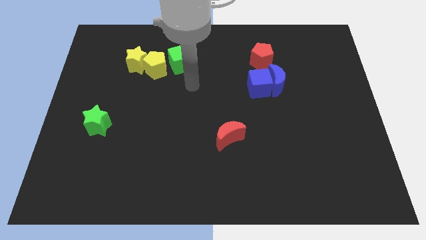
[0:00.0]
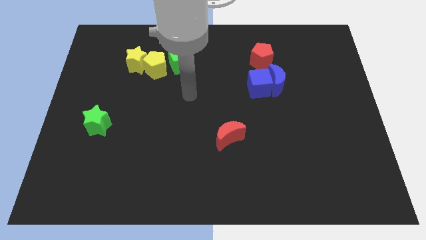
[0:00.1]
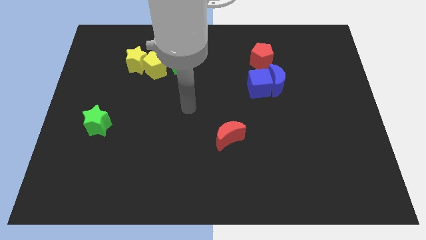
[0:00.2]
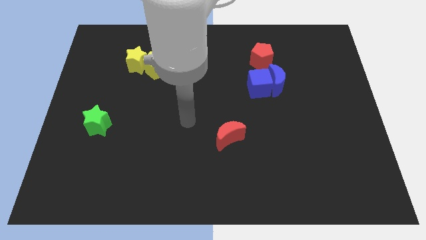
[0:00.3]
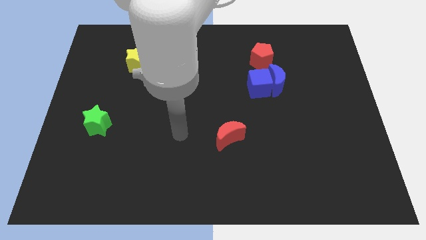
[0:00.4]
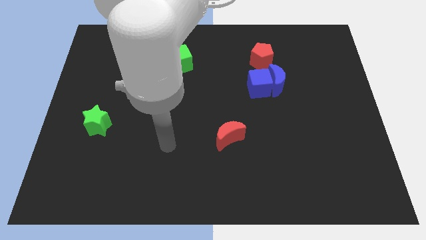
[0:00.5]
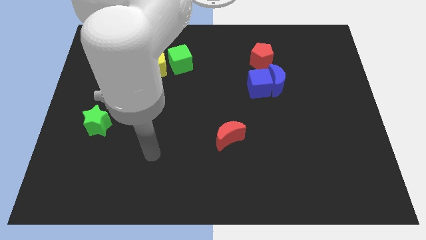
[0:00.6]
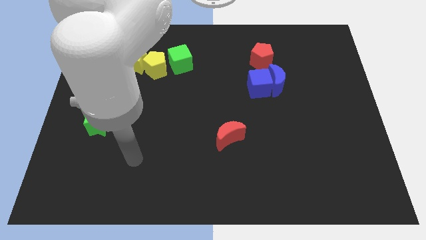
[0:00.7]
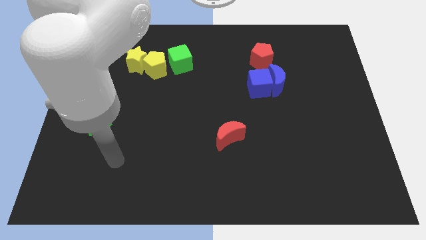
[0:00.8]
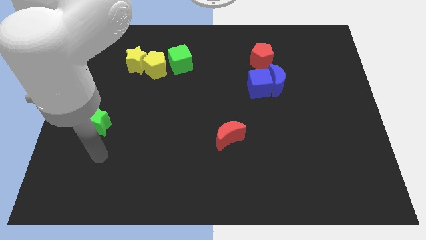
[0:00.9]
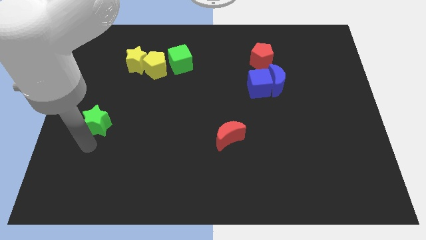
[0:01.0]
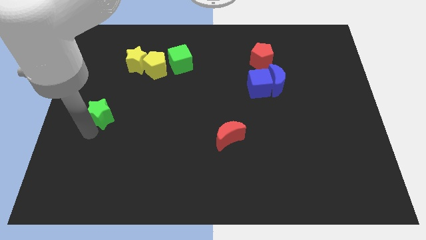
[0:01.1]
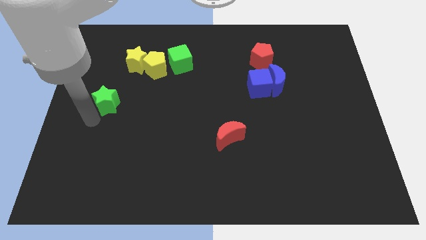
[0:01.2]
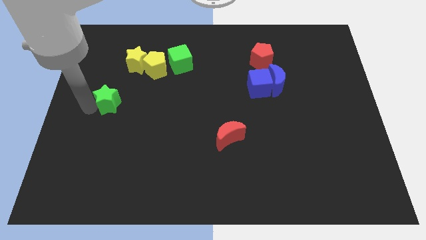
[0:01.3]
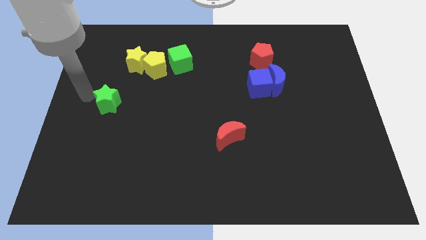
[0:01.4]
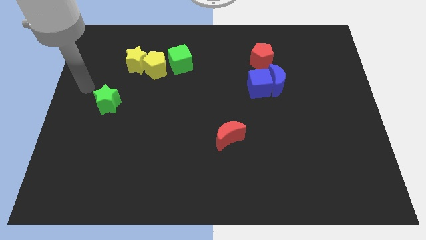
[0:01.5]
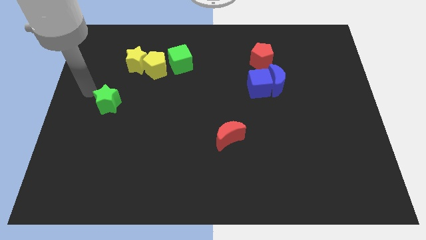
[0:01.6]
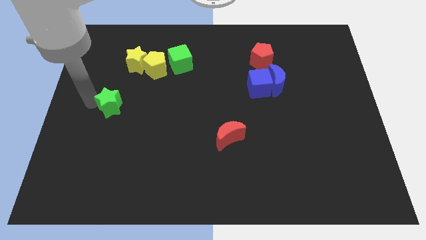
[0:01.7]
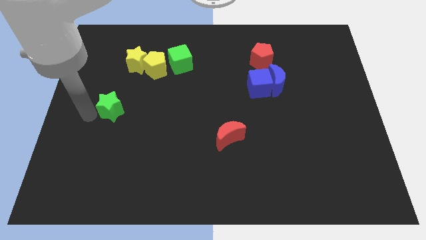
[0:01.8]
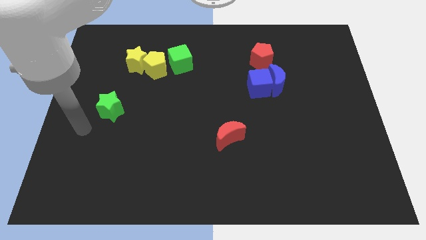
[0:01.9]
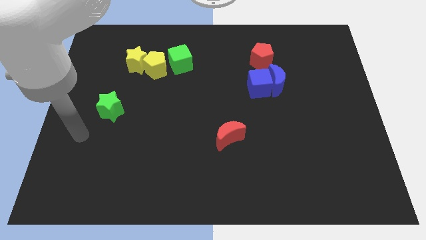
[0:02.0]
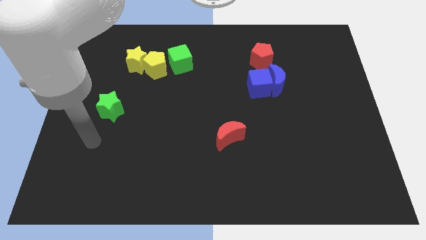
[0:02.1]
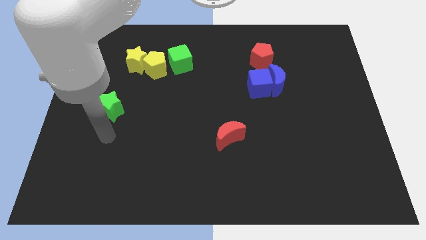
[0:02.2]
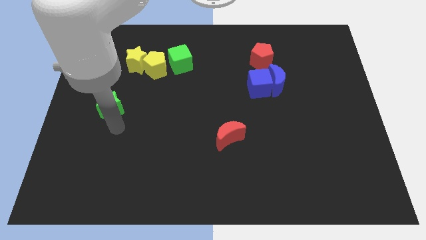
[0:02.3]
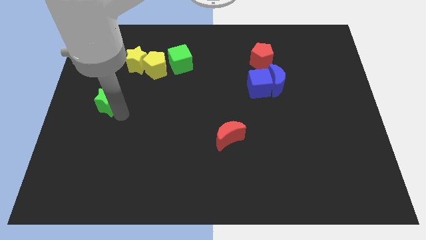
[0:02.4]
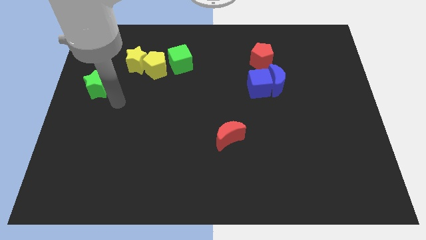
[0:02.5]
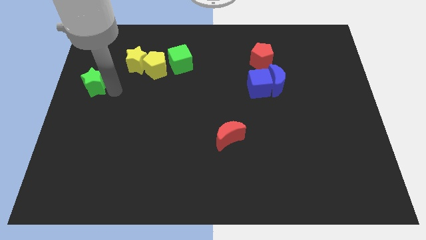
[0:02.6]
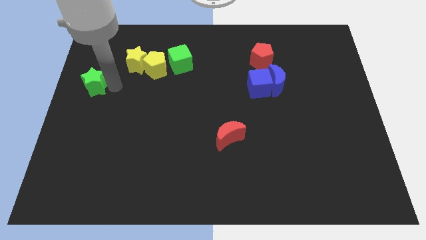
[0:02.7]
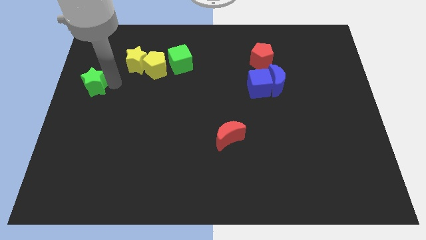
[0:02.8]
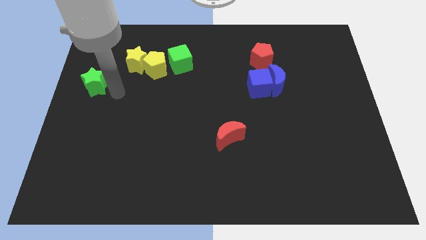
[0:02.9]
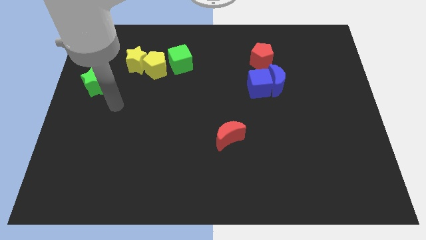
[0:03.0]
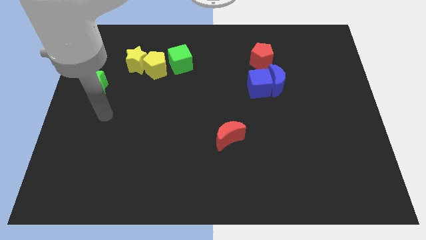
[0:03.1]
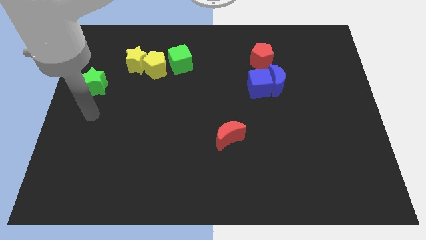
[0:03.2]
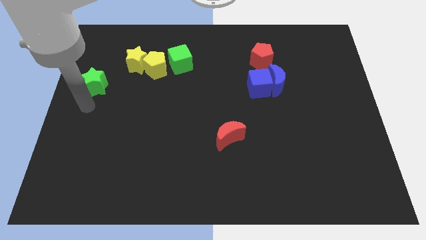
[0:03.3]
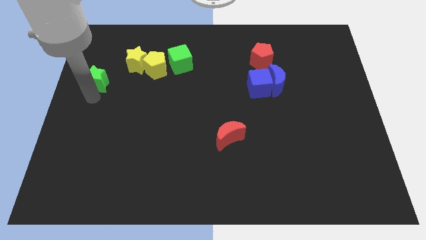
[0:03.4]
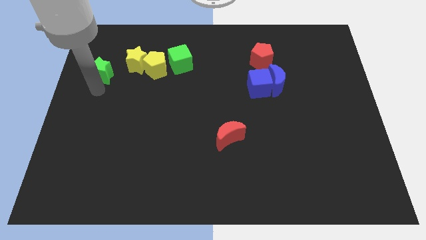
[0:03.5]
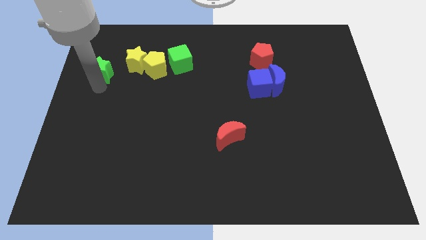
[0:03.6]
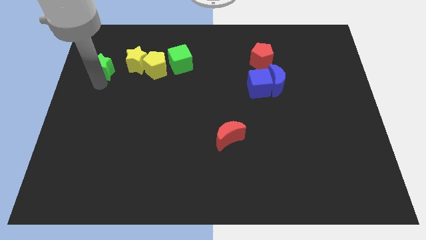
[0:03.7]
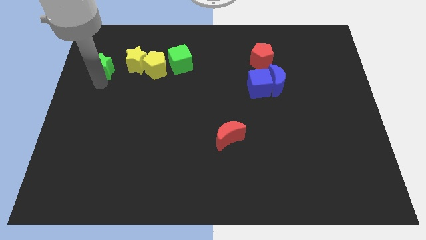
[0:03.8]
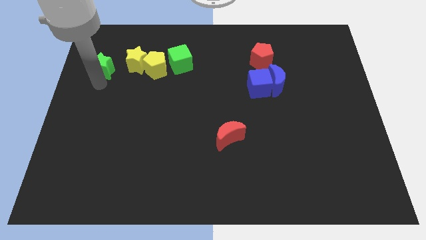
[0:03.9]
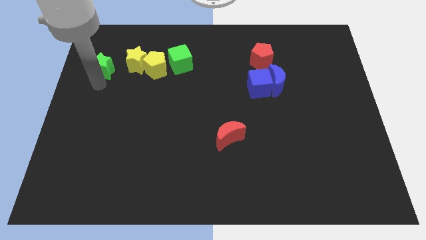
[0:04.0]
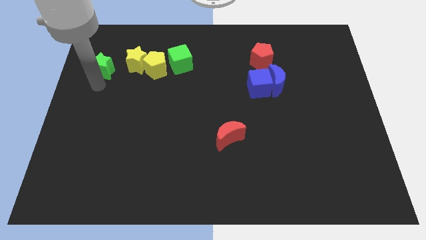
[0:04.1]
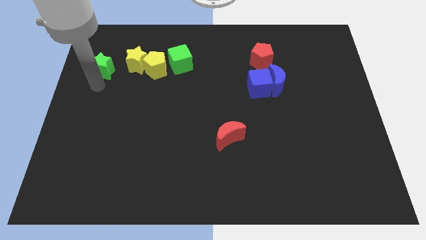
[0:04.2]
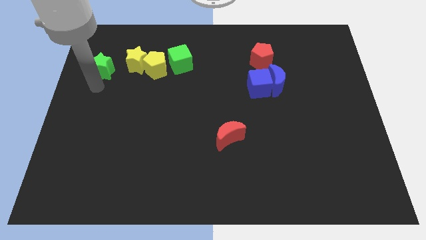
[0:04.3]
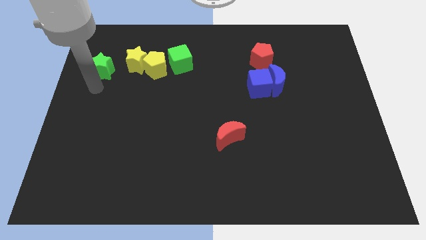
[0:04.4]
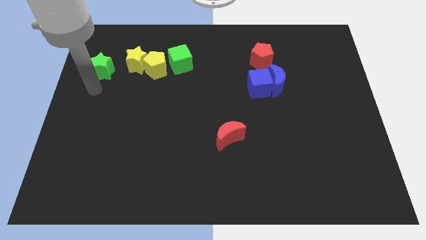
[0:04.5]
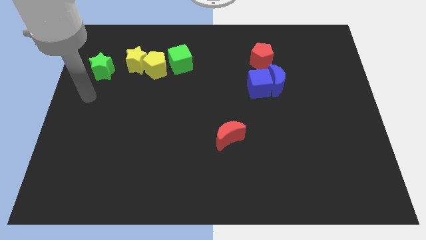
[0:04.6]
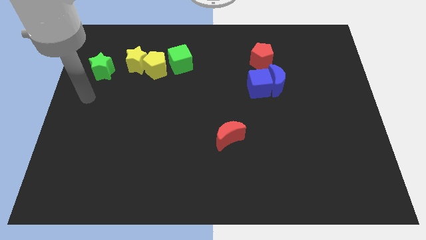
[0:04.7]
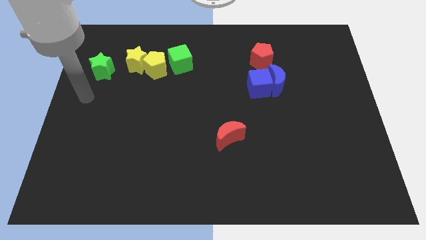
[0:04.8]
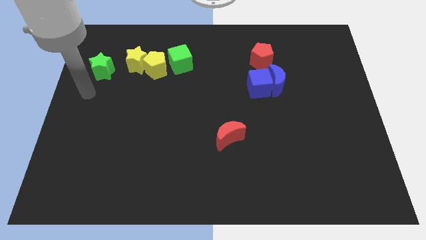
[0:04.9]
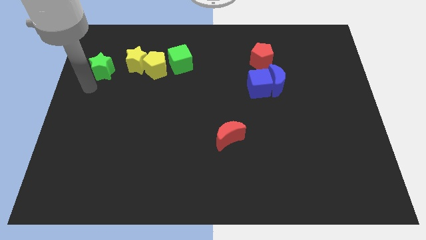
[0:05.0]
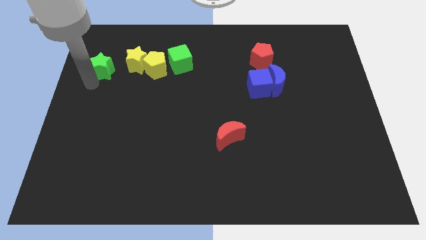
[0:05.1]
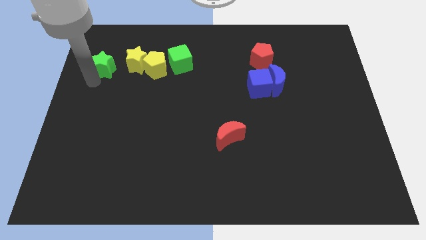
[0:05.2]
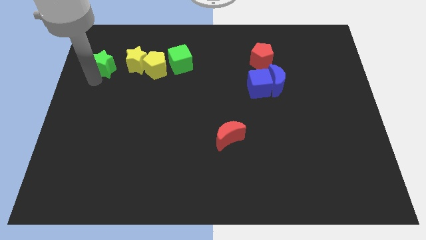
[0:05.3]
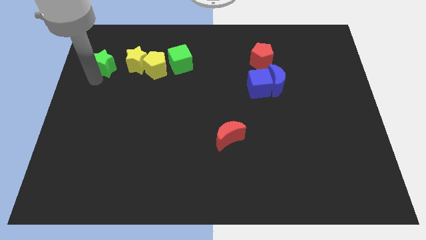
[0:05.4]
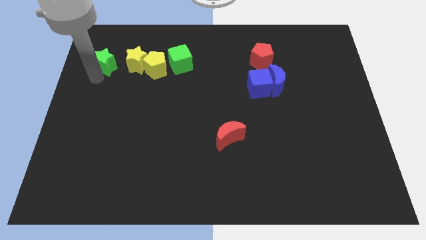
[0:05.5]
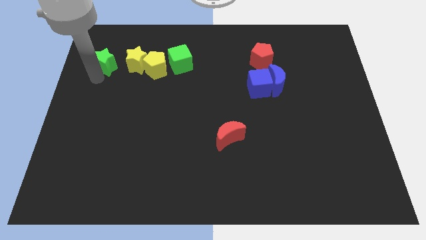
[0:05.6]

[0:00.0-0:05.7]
move the green star to the left of the yellow star

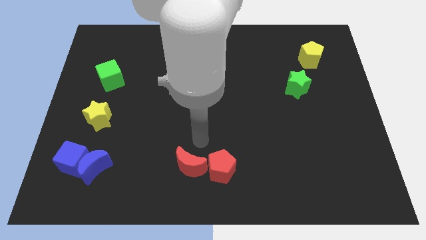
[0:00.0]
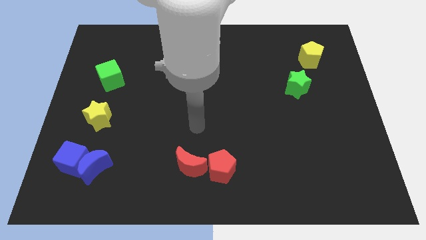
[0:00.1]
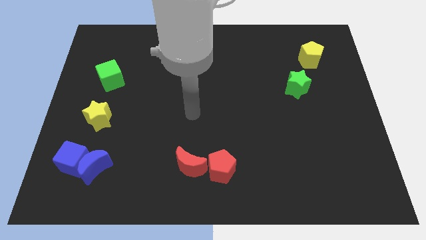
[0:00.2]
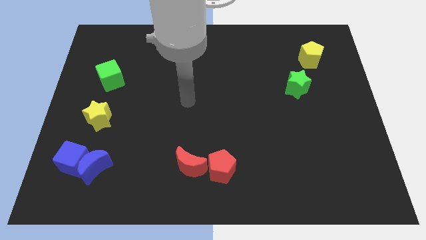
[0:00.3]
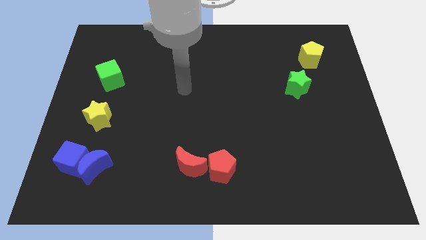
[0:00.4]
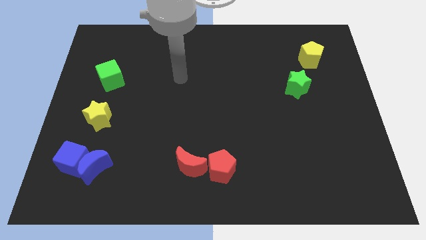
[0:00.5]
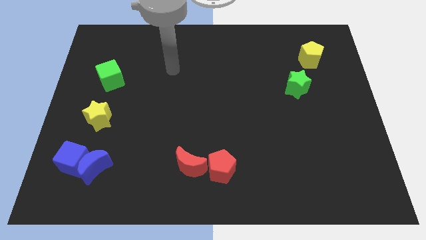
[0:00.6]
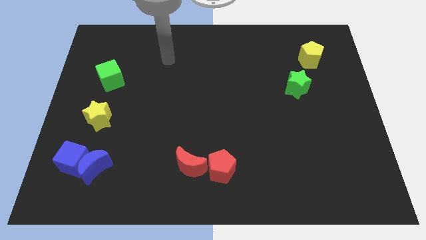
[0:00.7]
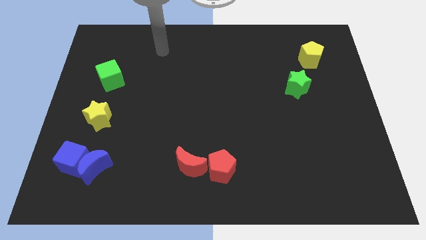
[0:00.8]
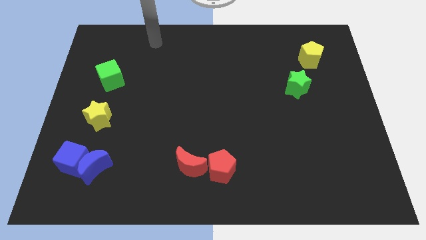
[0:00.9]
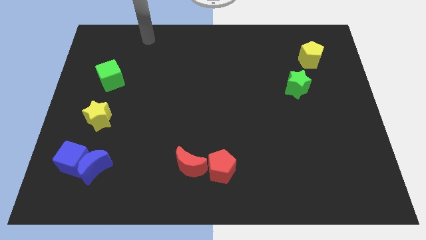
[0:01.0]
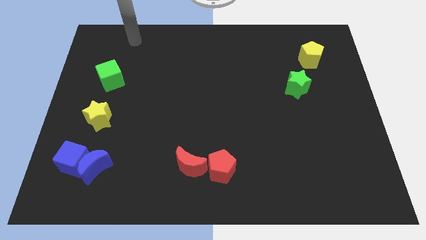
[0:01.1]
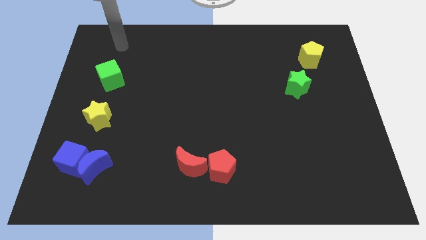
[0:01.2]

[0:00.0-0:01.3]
take your hand to the top left side of the board

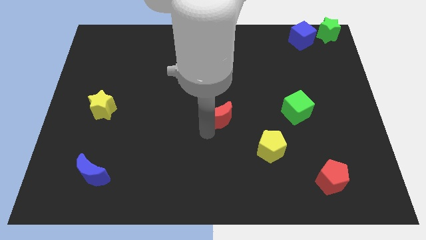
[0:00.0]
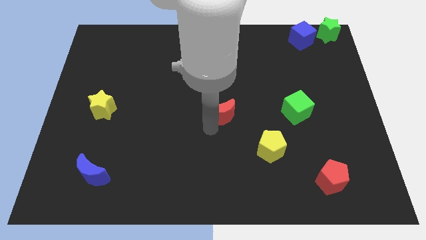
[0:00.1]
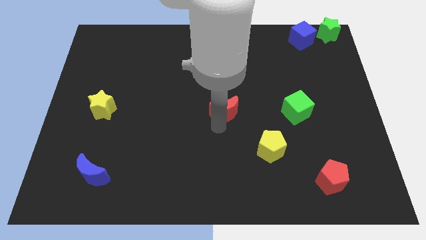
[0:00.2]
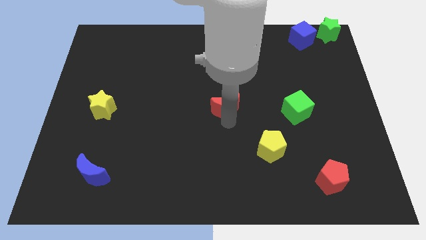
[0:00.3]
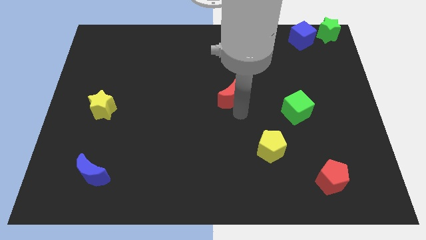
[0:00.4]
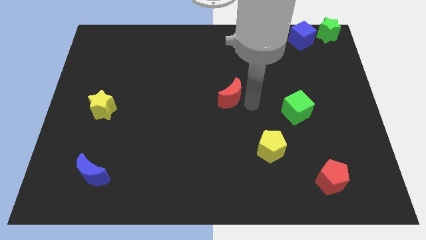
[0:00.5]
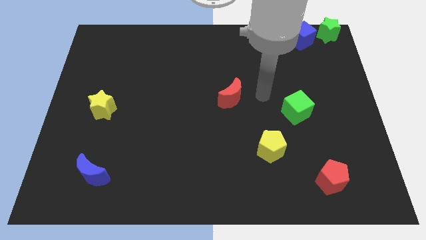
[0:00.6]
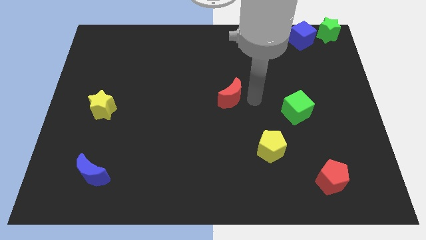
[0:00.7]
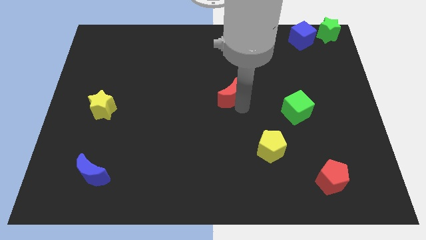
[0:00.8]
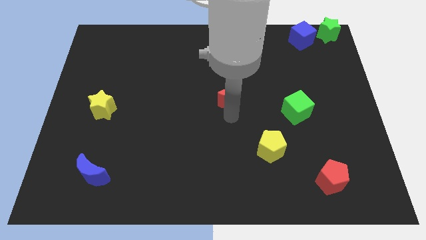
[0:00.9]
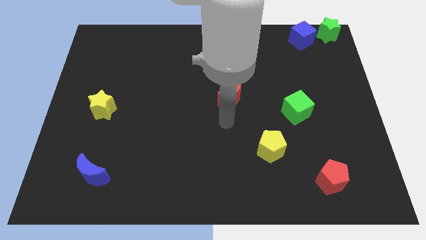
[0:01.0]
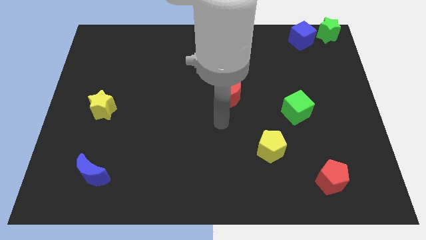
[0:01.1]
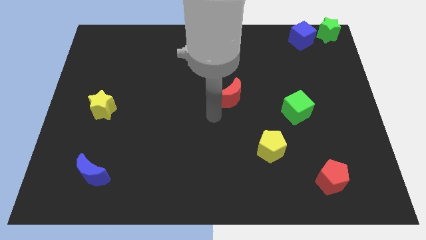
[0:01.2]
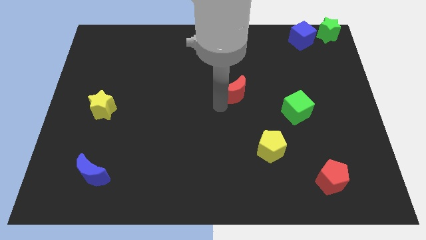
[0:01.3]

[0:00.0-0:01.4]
push the red crescent to the top of the board

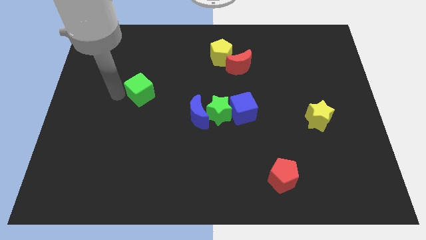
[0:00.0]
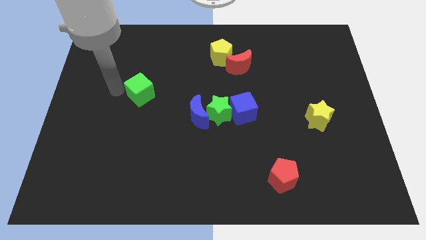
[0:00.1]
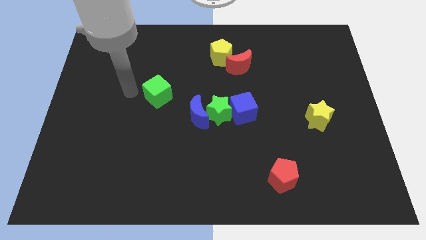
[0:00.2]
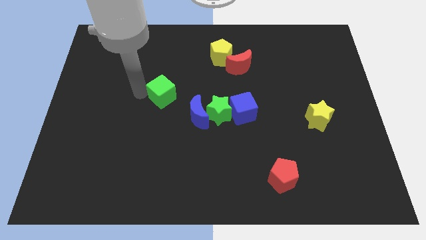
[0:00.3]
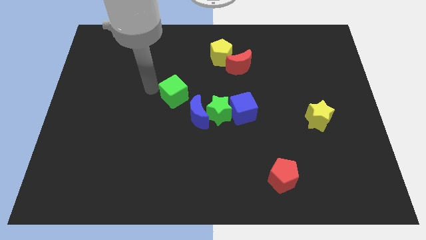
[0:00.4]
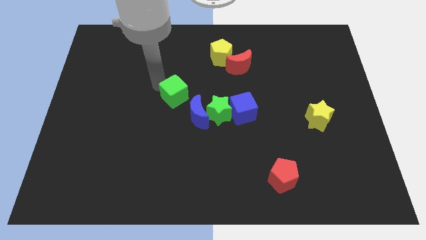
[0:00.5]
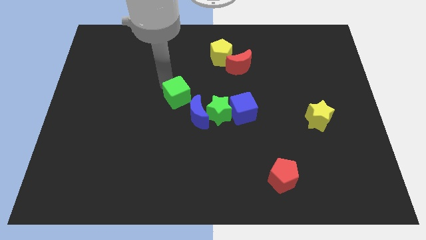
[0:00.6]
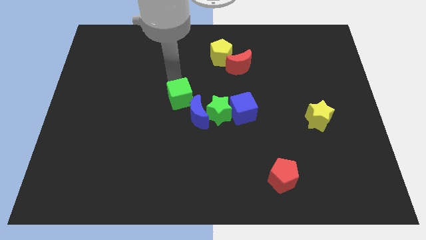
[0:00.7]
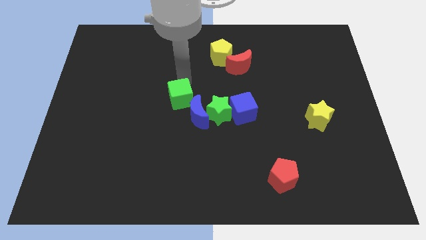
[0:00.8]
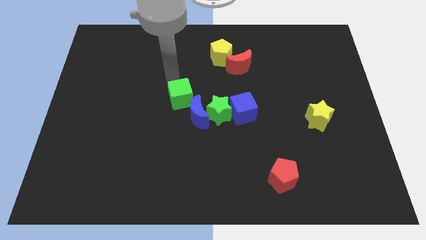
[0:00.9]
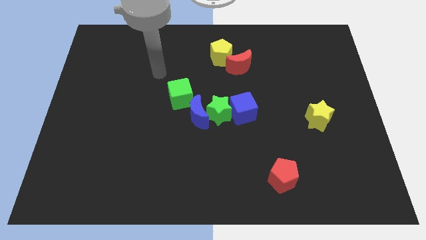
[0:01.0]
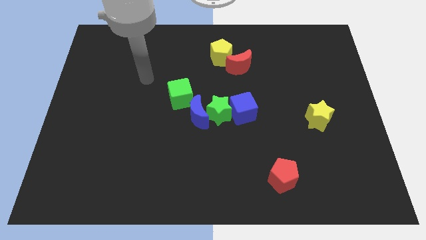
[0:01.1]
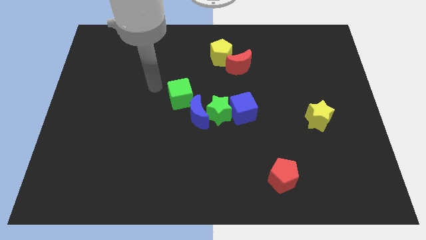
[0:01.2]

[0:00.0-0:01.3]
place the green cube to the top left side of the blue moon
